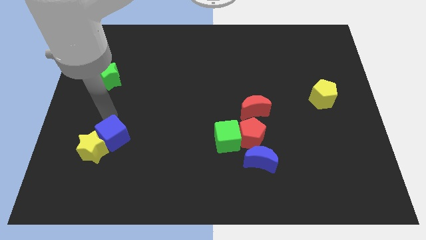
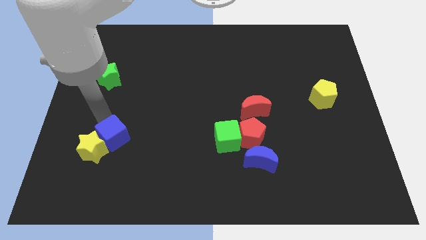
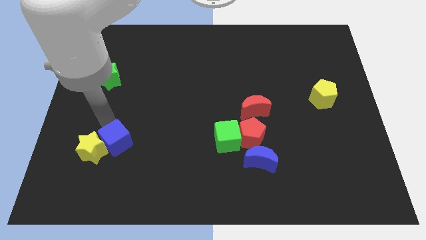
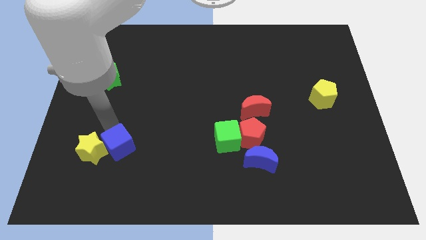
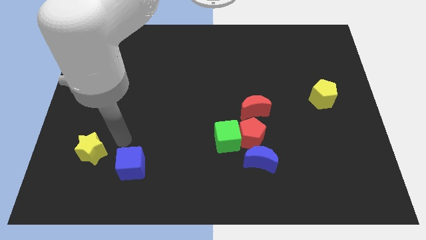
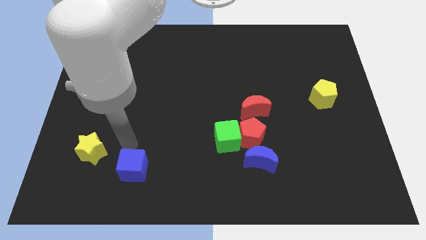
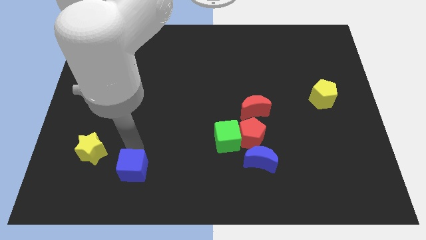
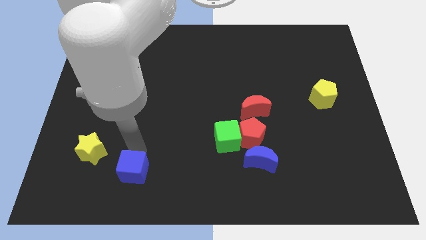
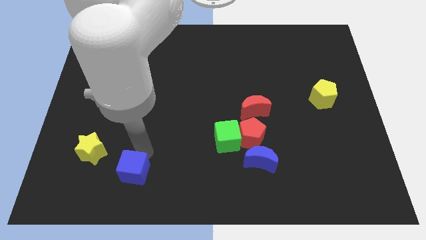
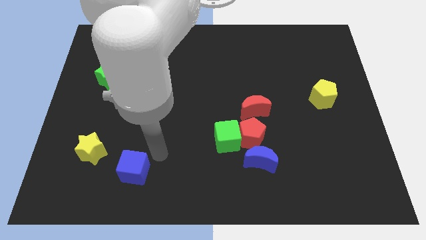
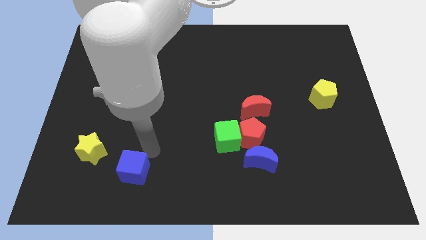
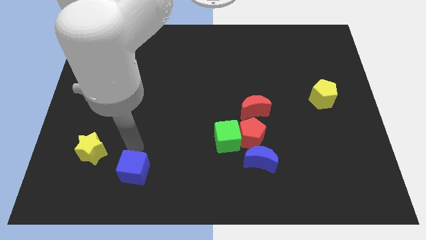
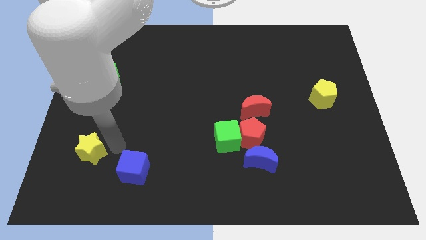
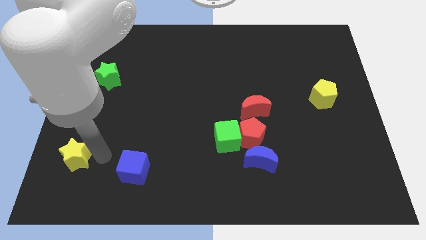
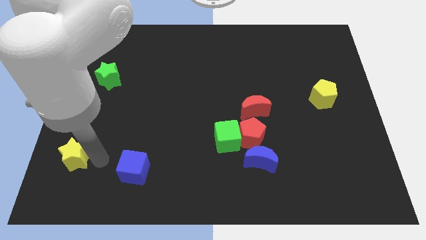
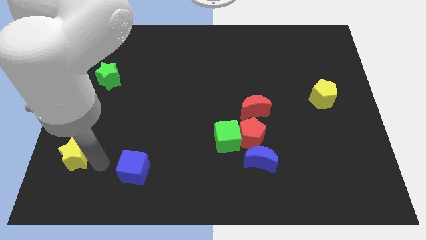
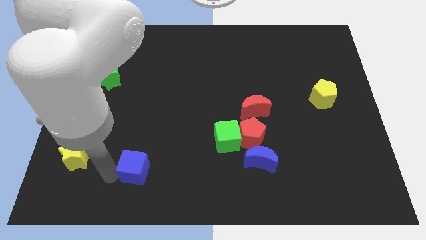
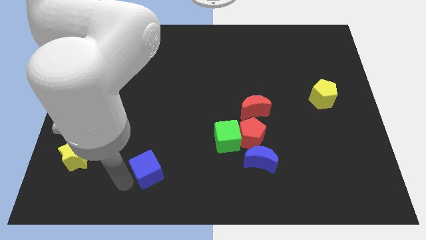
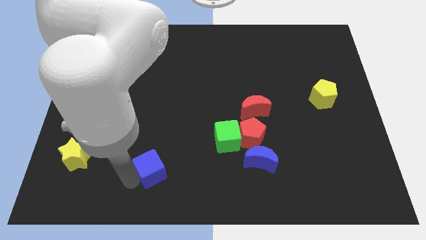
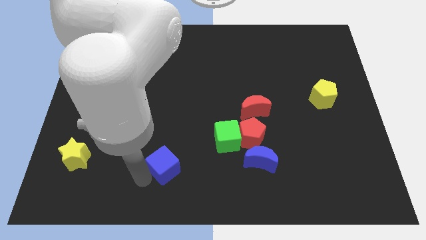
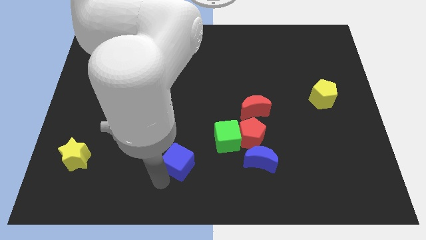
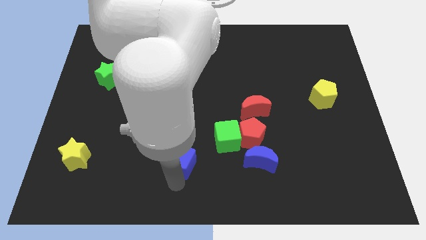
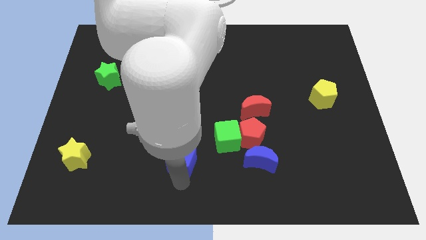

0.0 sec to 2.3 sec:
separate blue cube from yellow star

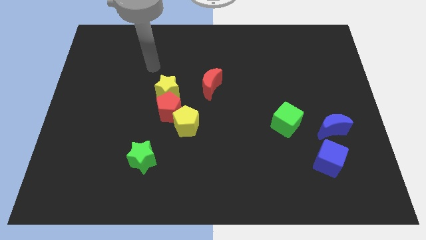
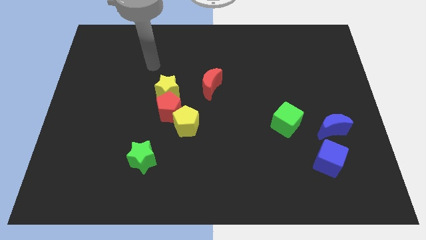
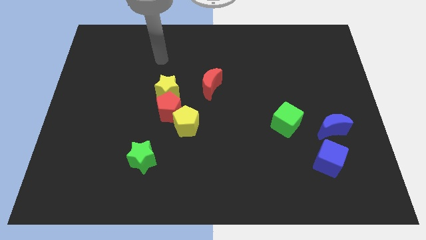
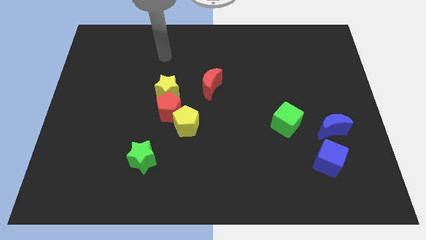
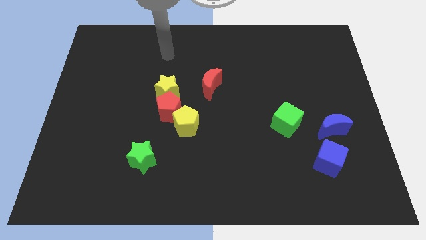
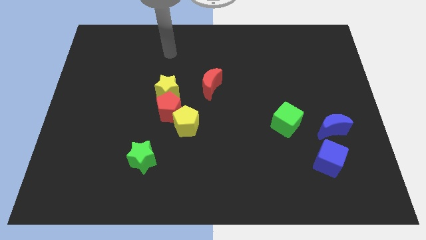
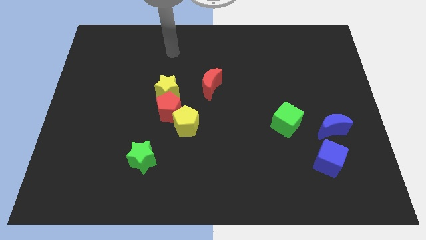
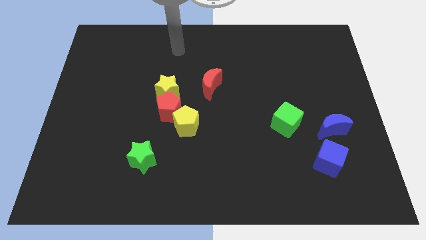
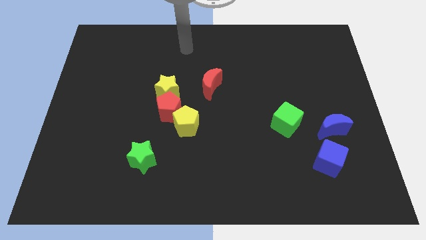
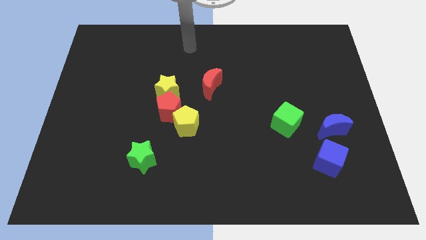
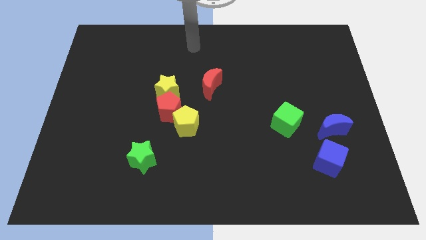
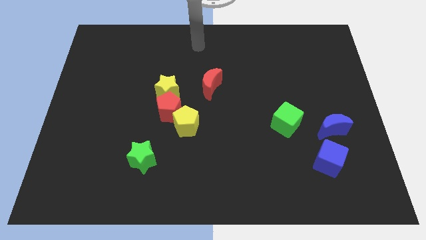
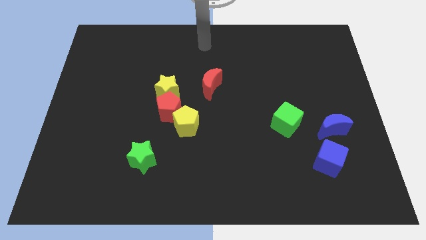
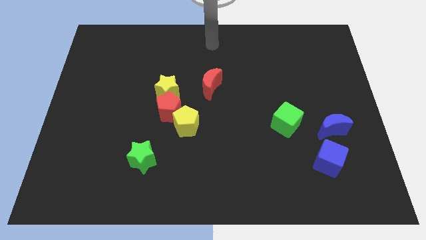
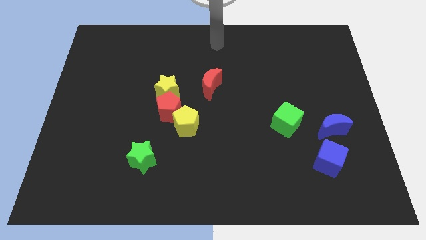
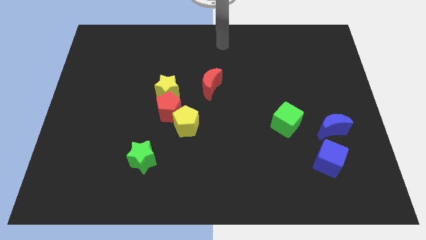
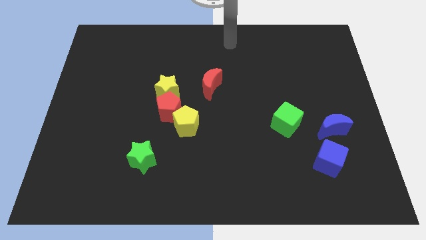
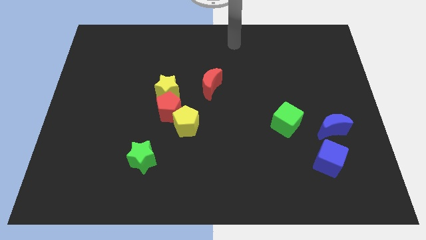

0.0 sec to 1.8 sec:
point your arm at the top center of the board

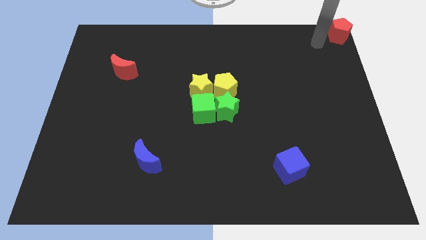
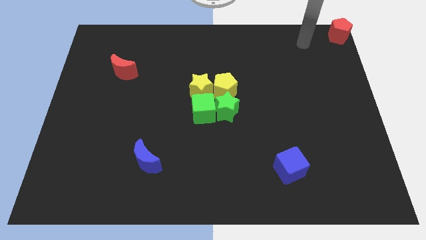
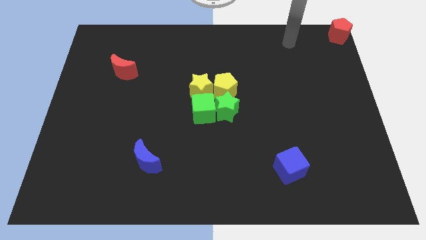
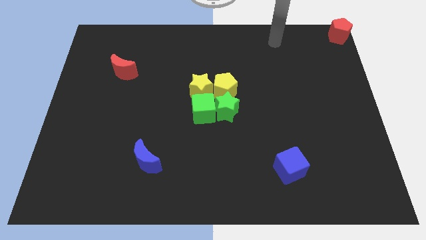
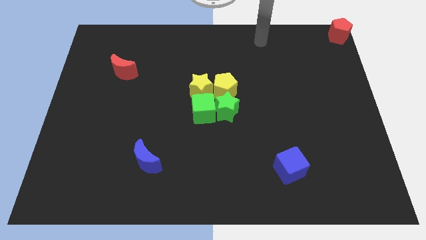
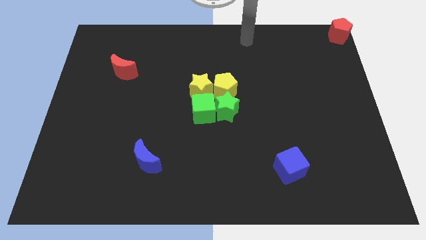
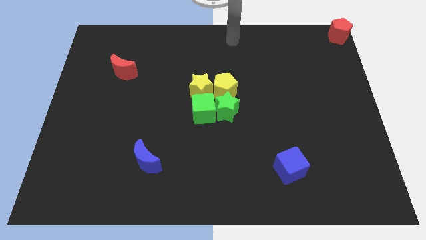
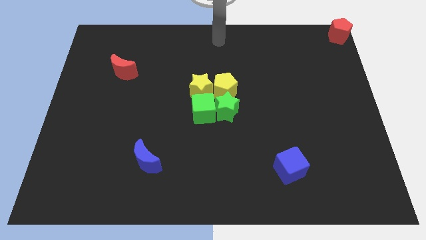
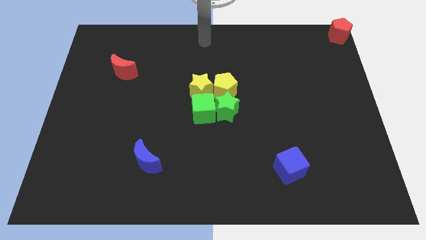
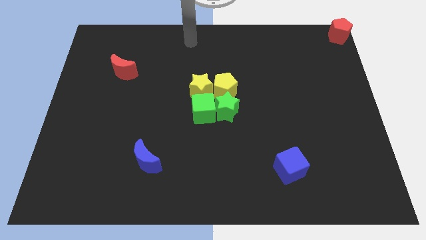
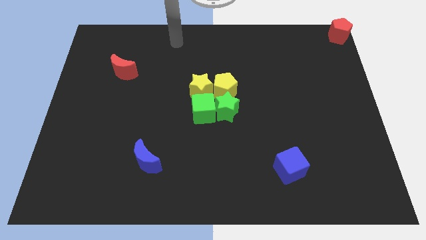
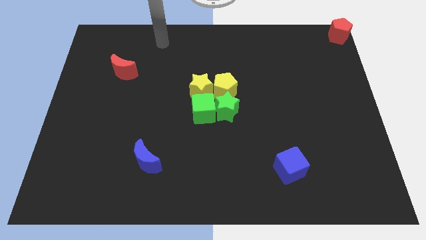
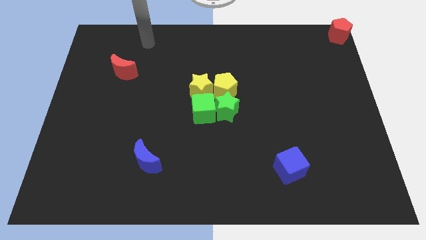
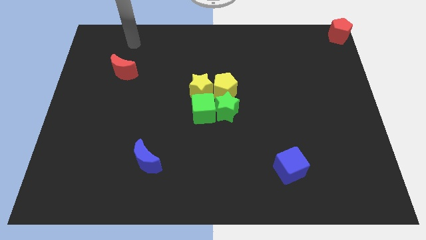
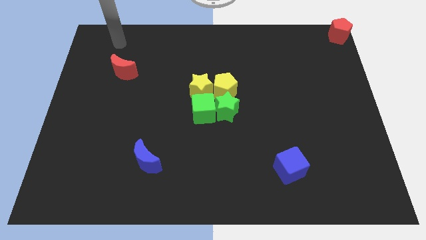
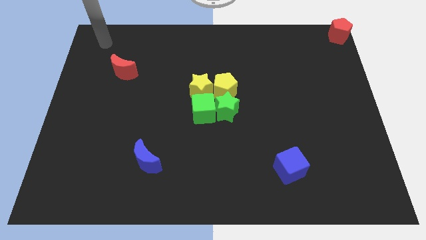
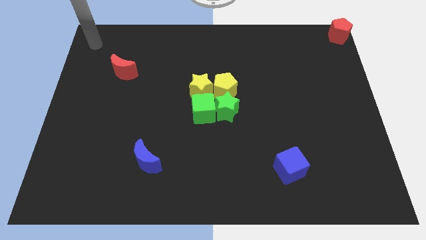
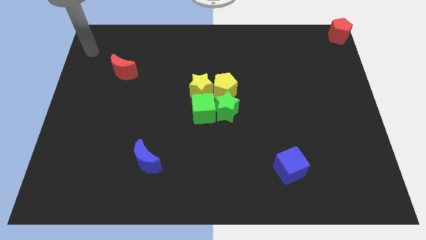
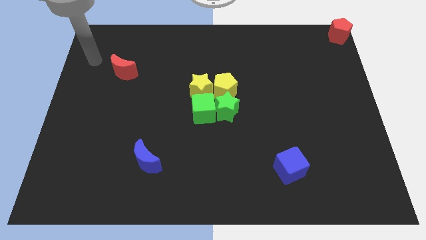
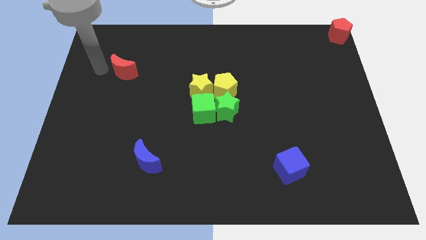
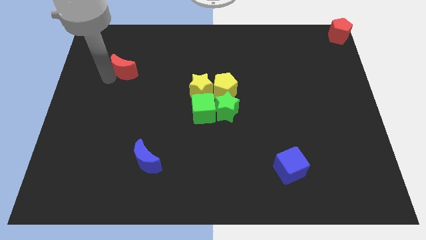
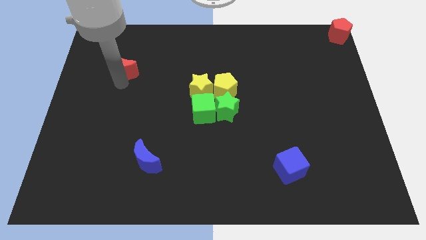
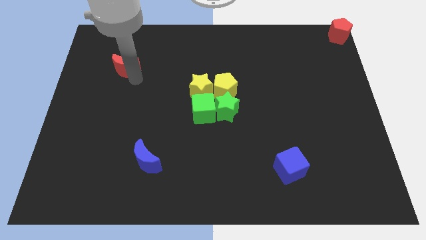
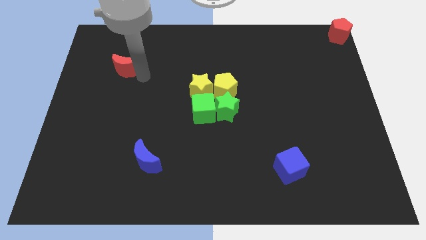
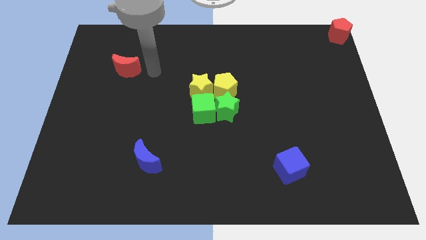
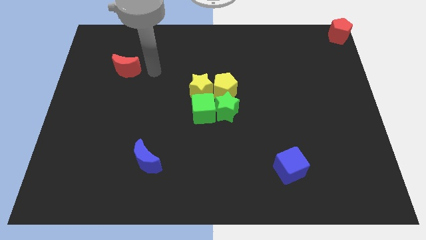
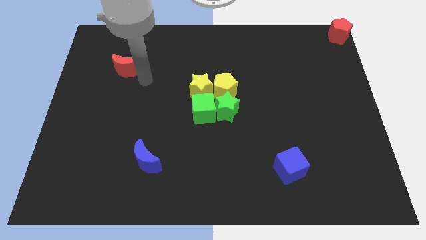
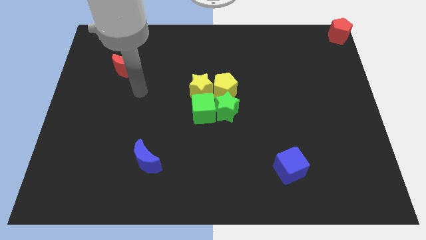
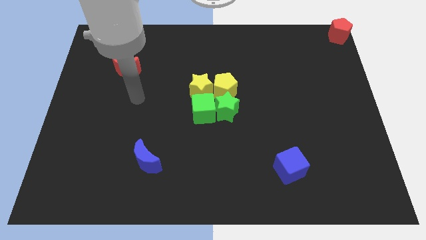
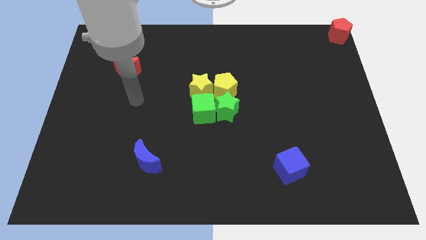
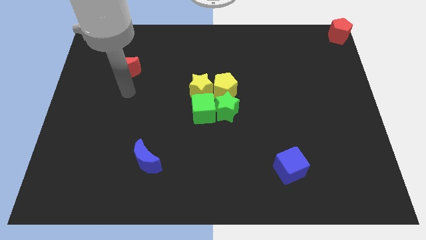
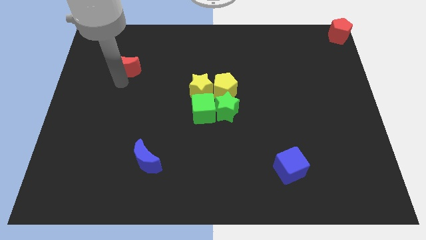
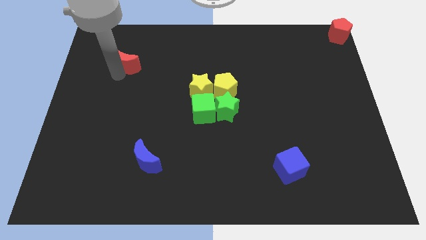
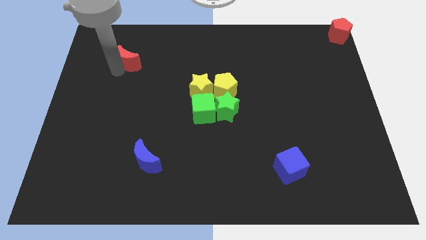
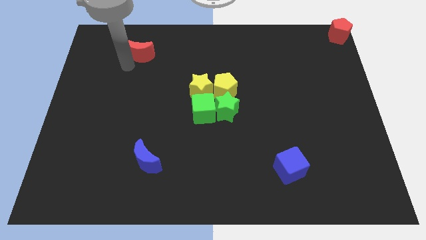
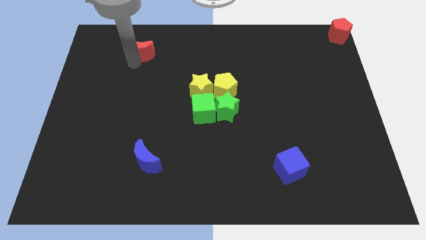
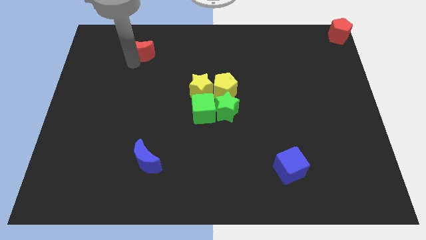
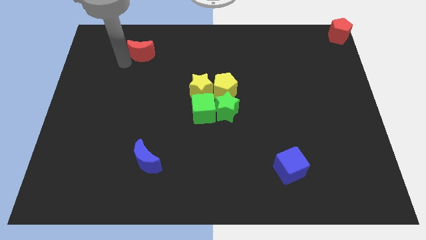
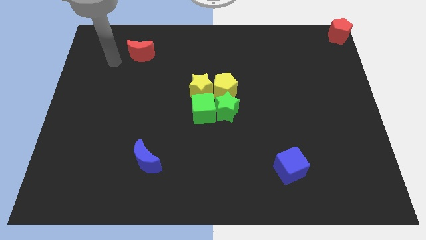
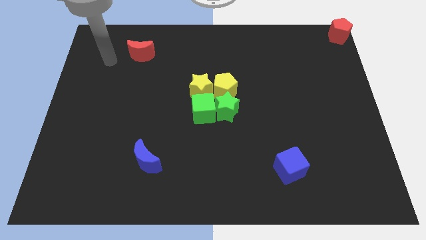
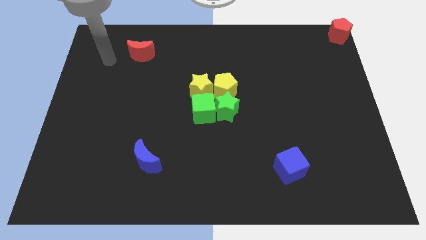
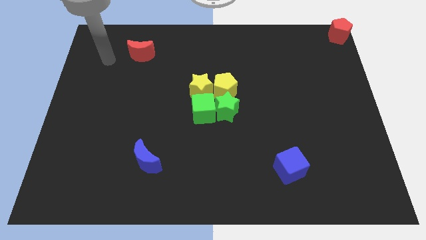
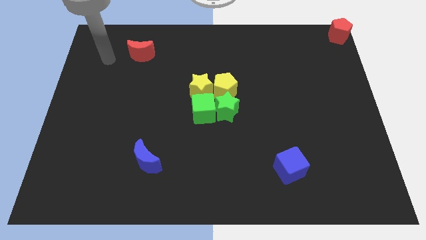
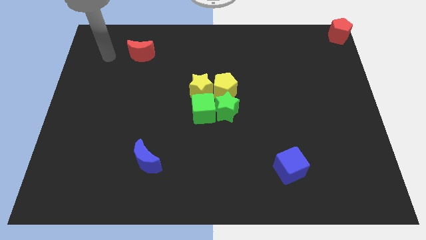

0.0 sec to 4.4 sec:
move the red crescent to the top of the board

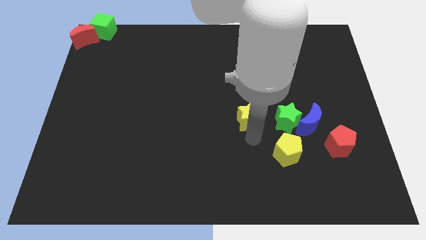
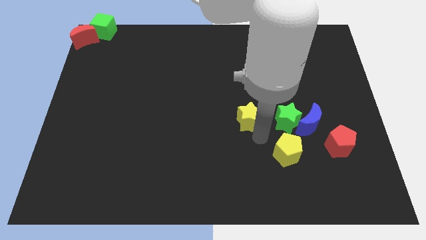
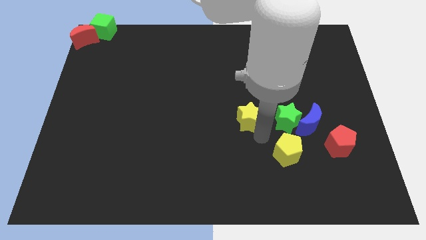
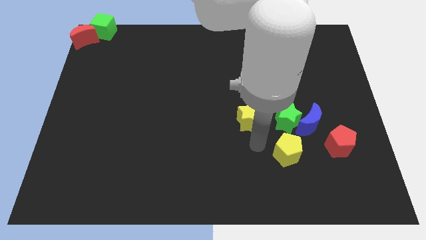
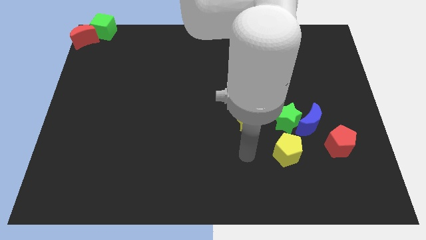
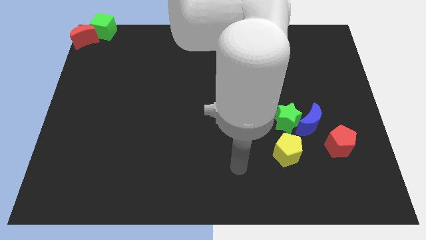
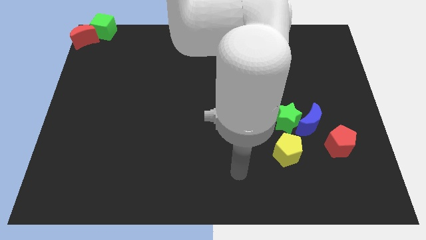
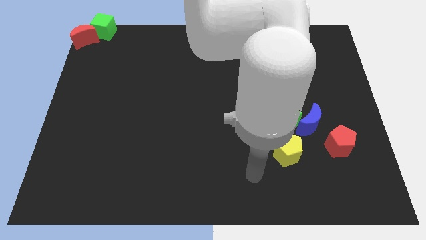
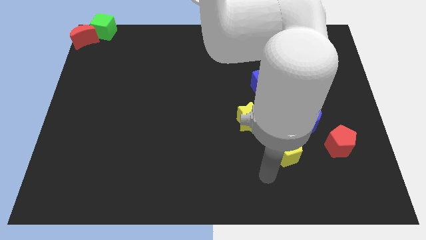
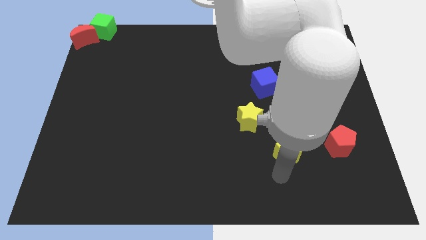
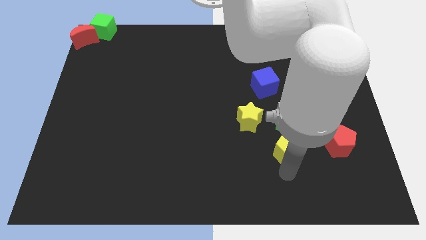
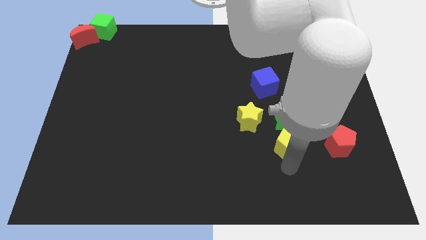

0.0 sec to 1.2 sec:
touch the bottom of yellow pentagon
